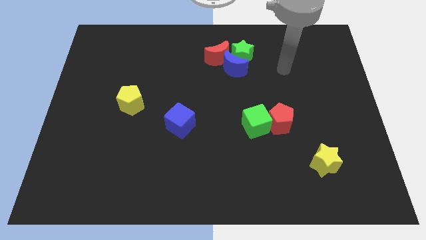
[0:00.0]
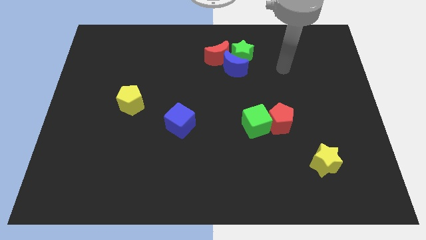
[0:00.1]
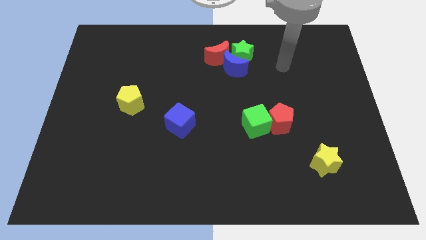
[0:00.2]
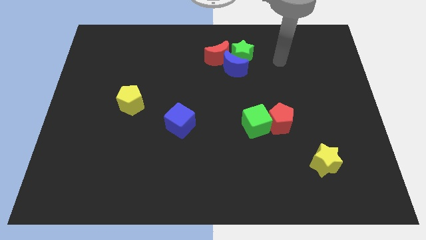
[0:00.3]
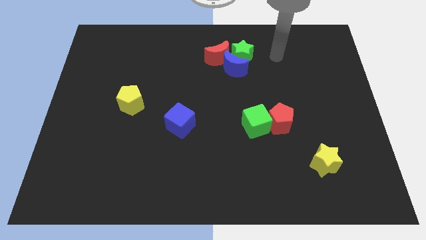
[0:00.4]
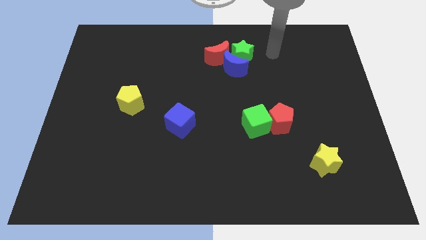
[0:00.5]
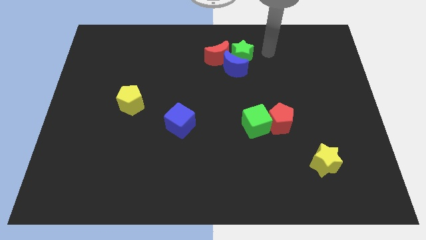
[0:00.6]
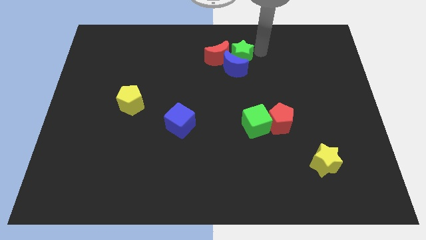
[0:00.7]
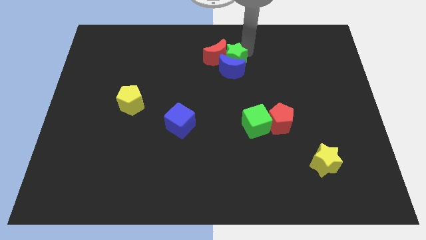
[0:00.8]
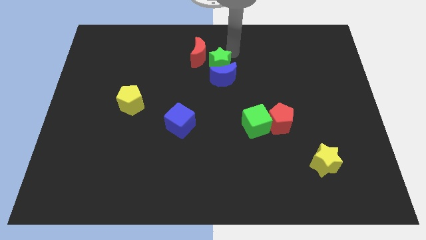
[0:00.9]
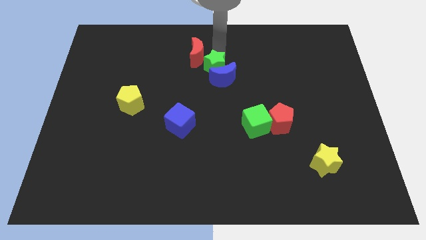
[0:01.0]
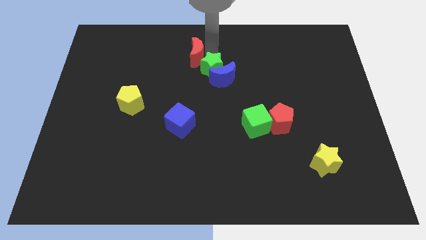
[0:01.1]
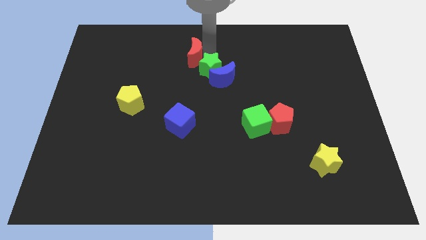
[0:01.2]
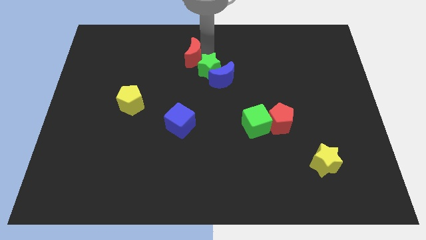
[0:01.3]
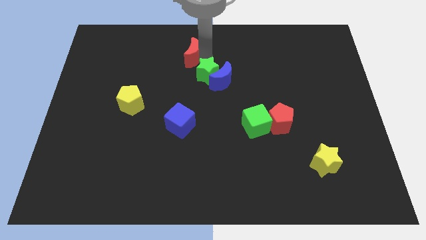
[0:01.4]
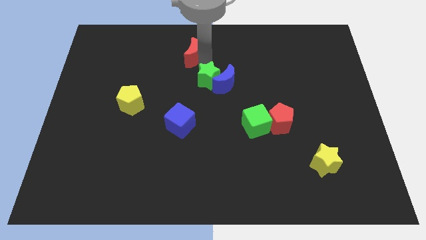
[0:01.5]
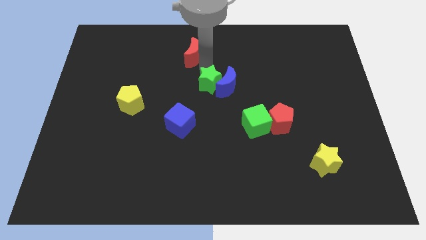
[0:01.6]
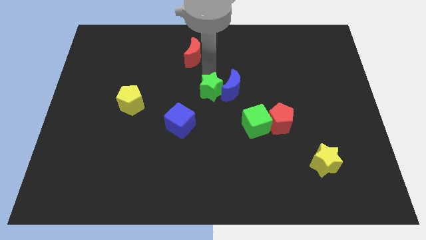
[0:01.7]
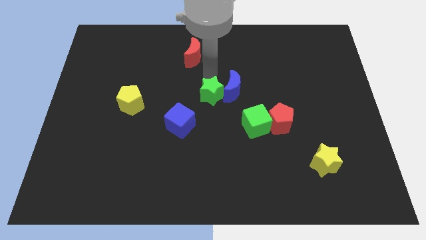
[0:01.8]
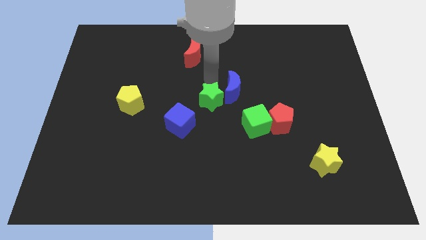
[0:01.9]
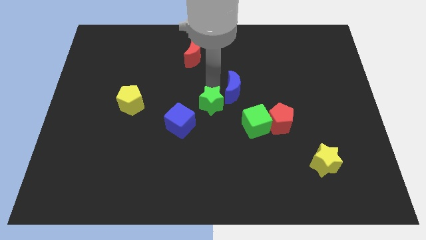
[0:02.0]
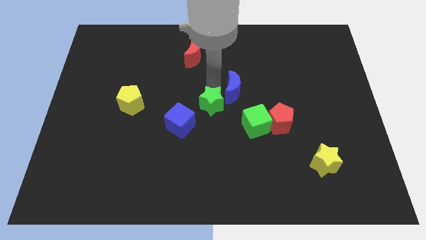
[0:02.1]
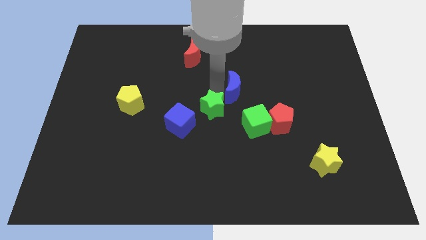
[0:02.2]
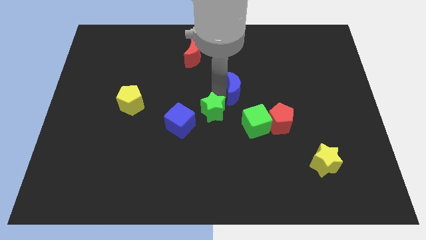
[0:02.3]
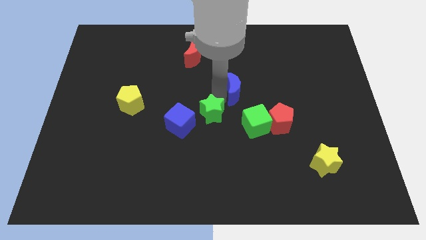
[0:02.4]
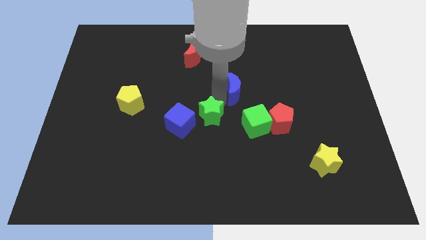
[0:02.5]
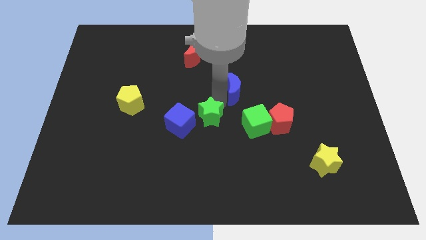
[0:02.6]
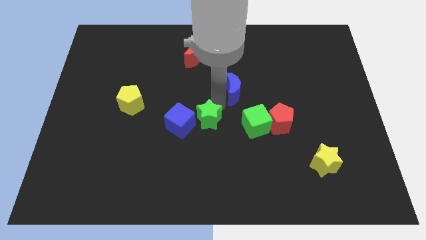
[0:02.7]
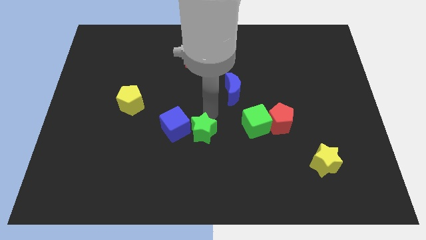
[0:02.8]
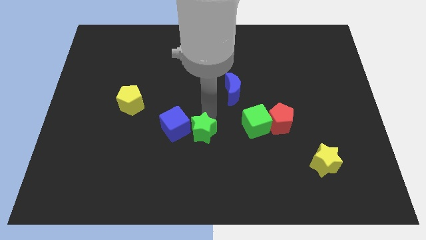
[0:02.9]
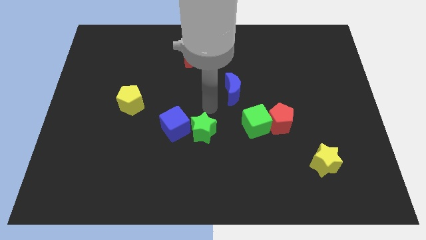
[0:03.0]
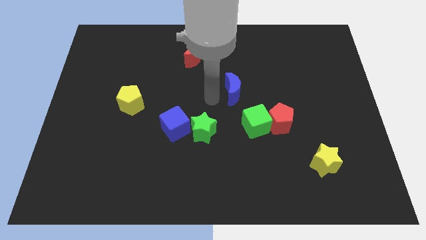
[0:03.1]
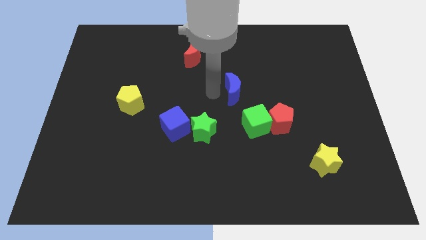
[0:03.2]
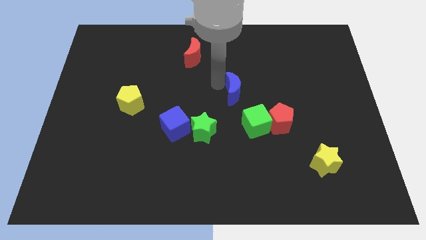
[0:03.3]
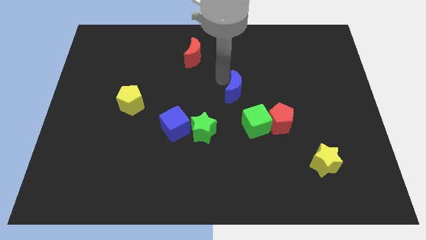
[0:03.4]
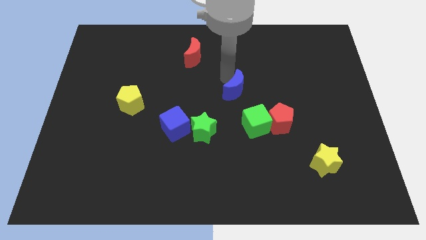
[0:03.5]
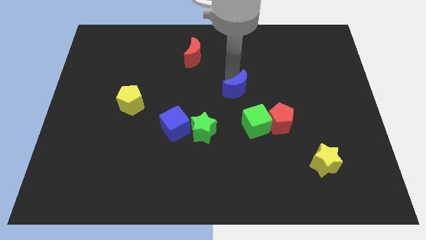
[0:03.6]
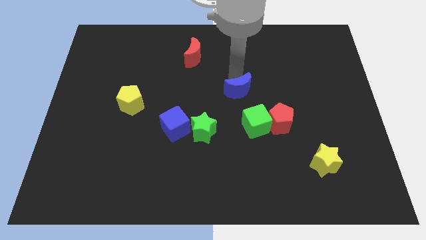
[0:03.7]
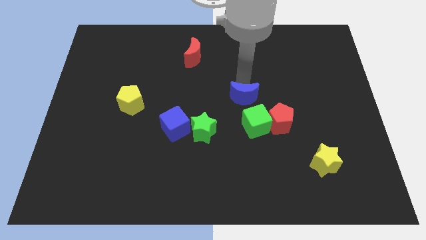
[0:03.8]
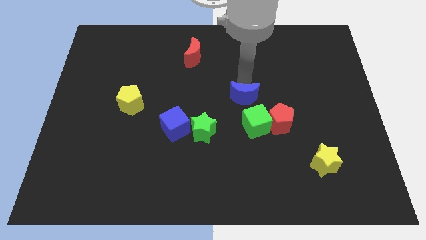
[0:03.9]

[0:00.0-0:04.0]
place the green star beside the blue cube

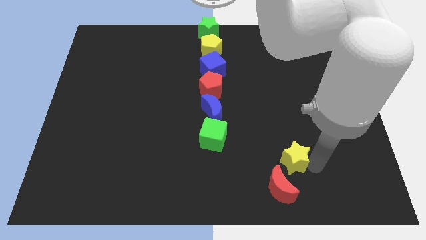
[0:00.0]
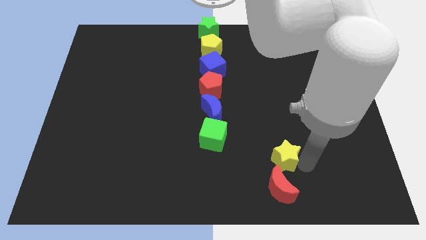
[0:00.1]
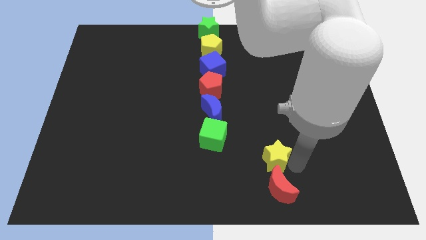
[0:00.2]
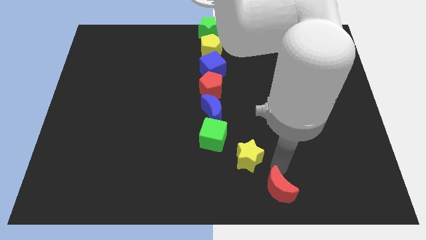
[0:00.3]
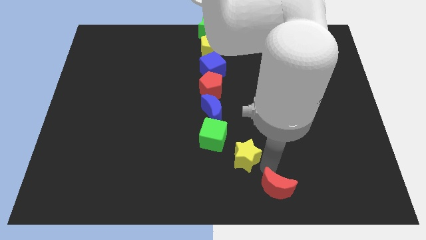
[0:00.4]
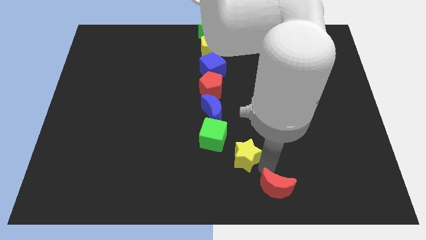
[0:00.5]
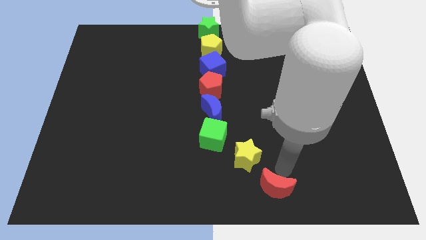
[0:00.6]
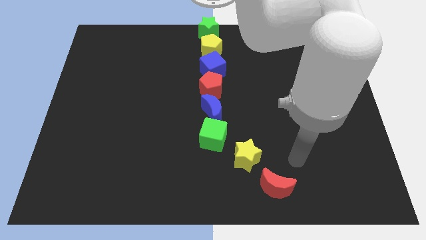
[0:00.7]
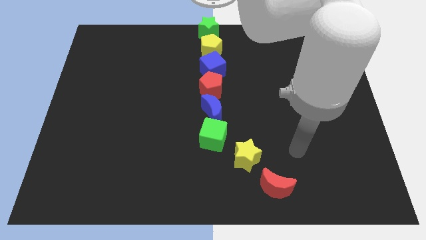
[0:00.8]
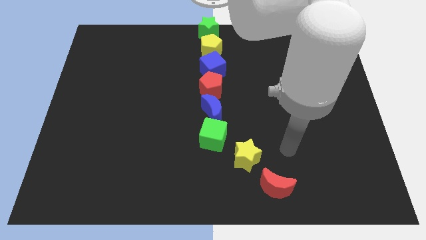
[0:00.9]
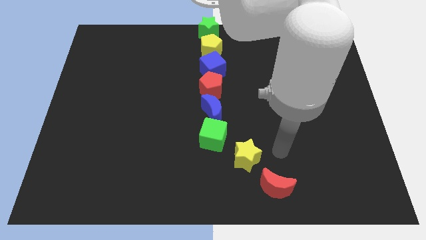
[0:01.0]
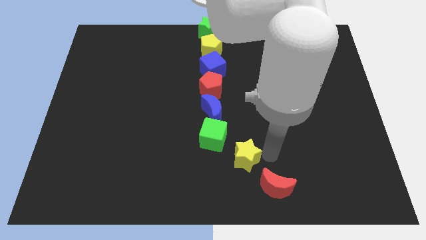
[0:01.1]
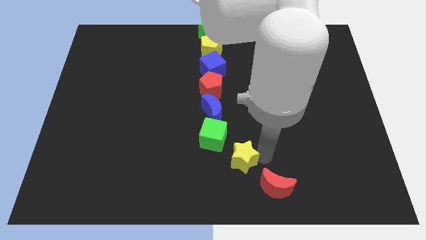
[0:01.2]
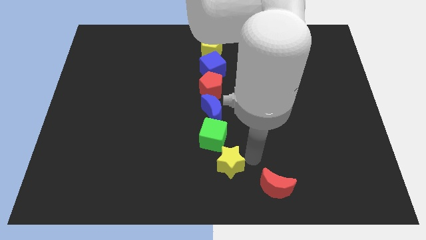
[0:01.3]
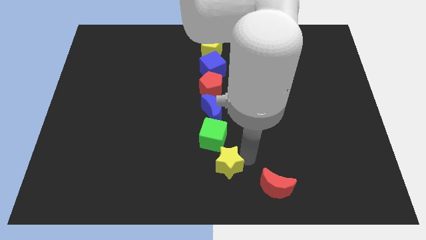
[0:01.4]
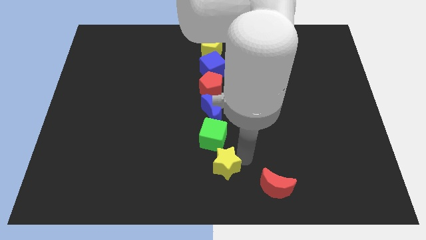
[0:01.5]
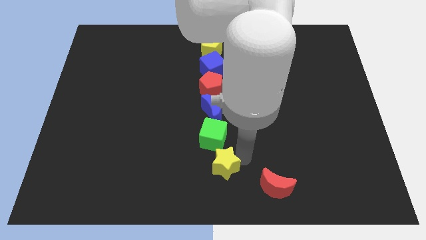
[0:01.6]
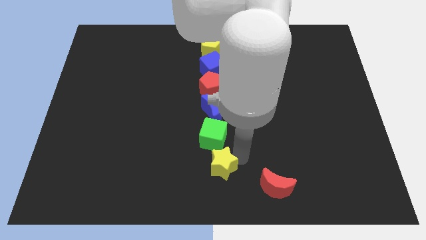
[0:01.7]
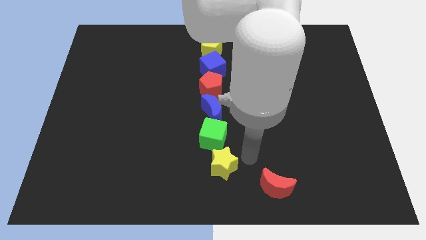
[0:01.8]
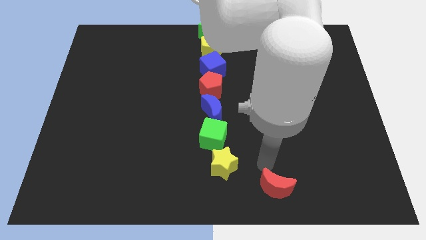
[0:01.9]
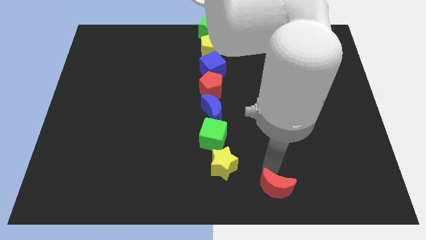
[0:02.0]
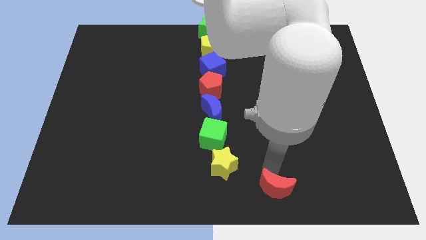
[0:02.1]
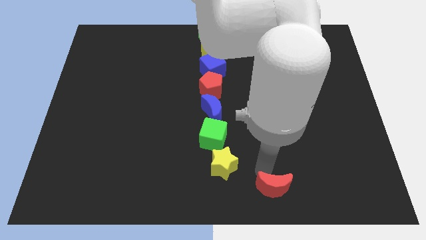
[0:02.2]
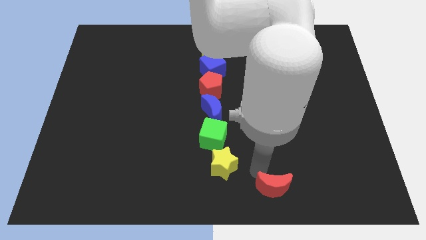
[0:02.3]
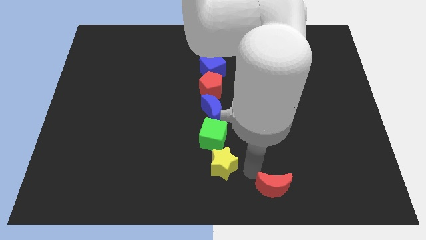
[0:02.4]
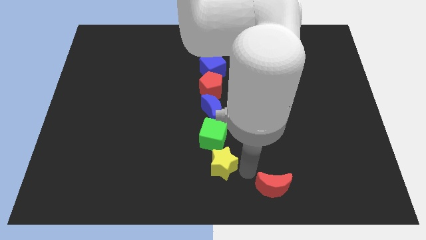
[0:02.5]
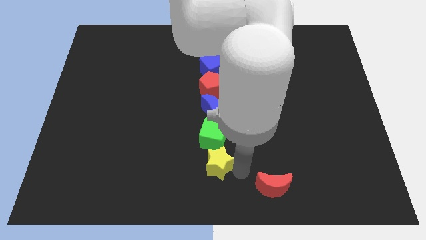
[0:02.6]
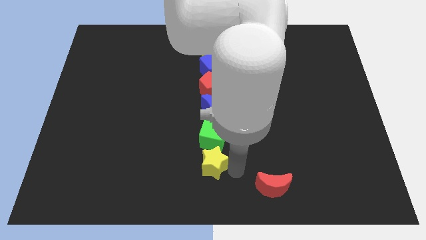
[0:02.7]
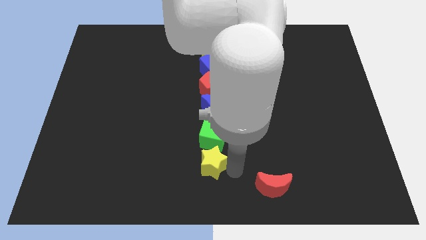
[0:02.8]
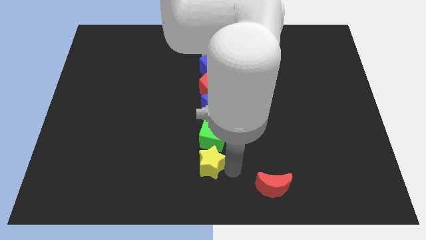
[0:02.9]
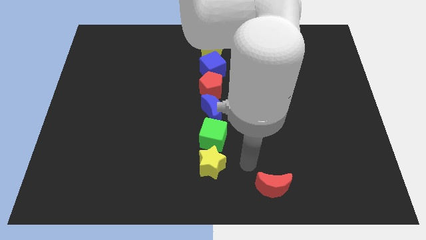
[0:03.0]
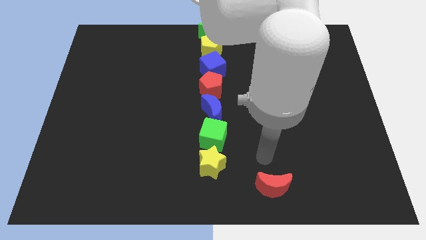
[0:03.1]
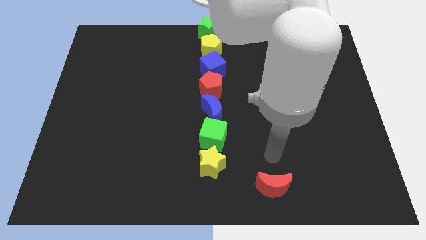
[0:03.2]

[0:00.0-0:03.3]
push the yellow star to the bottom of the green cube

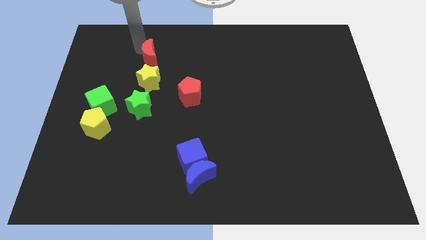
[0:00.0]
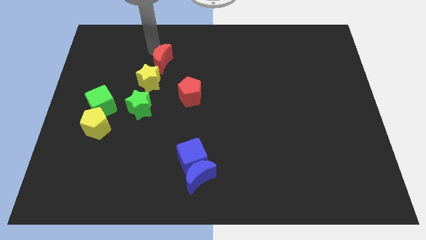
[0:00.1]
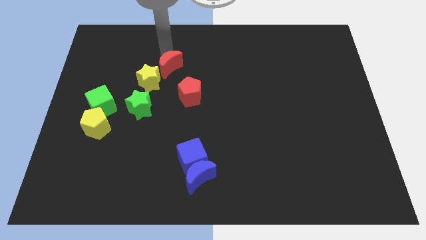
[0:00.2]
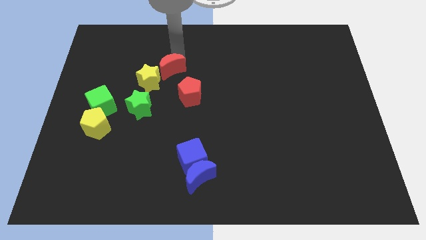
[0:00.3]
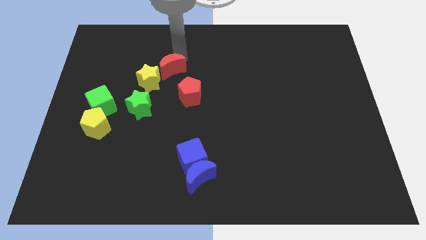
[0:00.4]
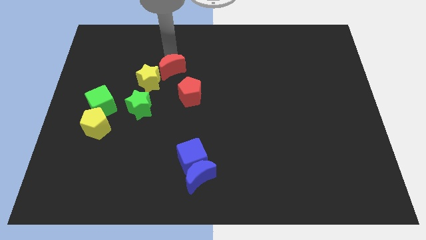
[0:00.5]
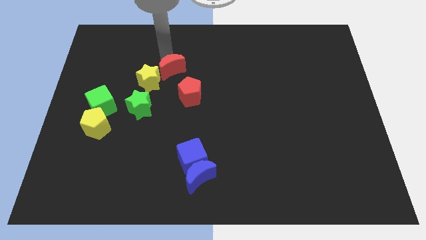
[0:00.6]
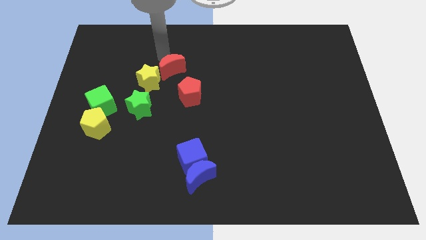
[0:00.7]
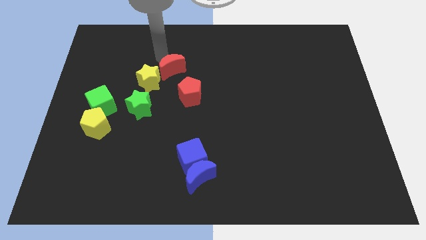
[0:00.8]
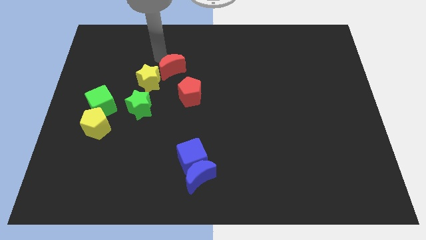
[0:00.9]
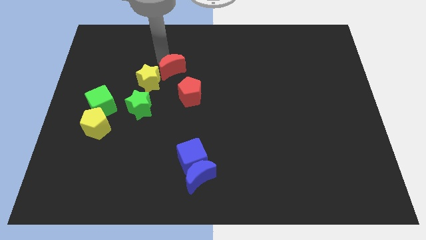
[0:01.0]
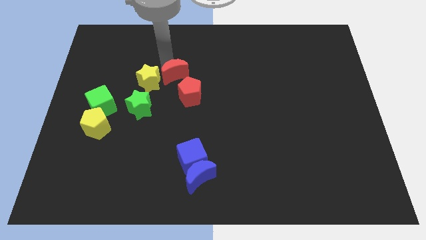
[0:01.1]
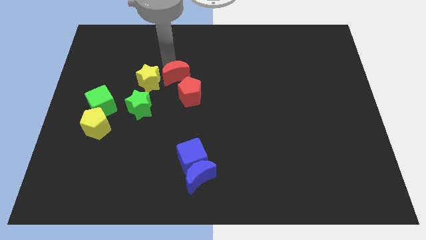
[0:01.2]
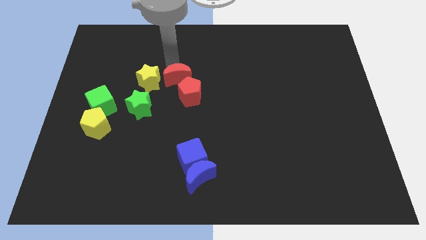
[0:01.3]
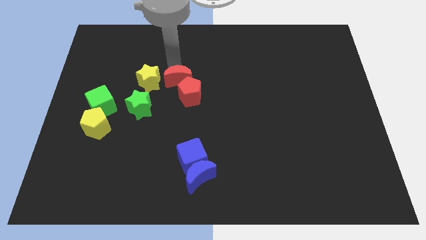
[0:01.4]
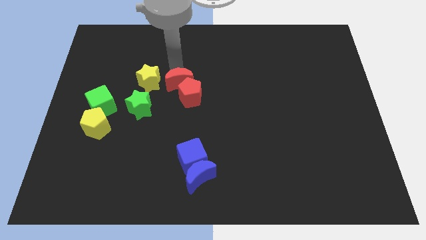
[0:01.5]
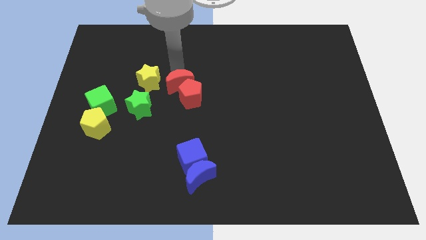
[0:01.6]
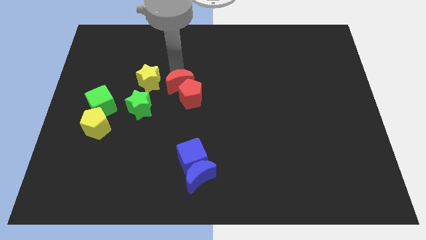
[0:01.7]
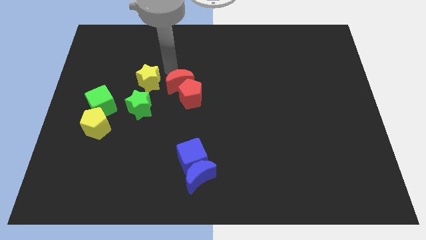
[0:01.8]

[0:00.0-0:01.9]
move the red crescent into the top of the red pentagon
